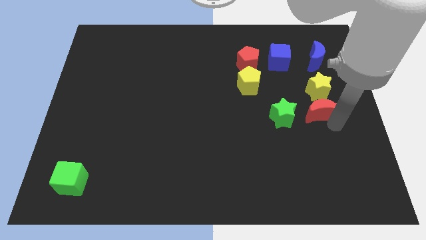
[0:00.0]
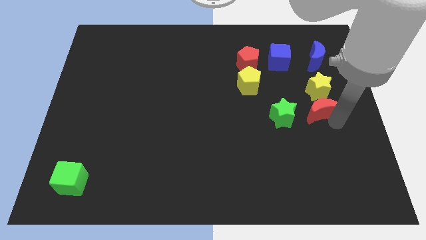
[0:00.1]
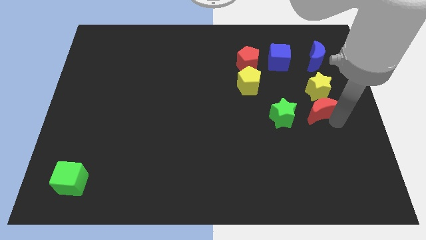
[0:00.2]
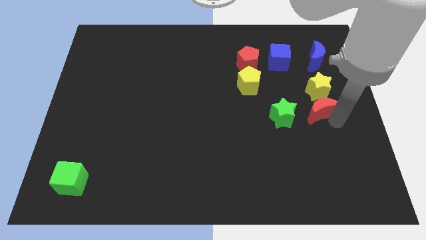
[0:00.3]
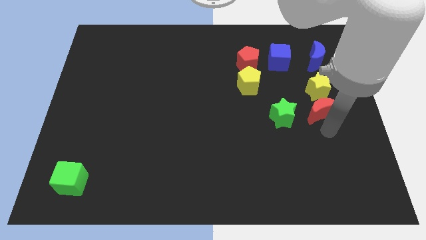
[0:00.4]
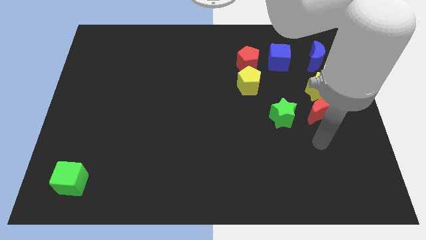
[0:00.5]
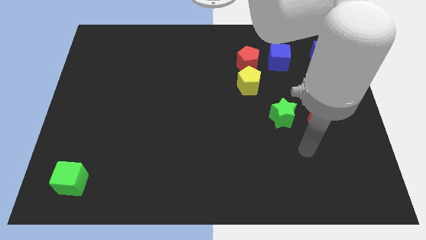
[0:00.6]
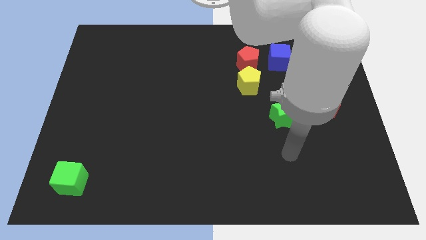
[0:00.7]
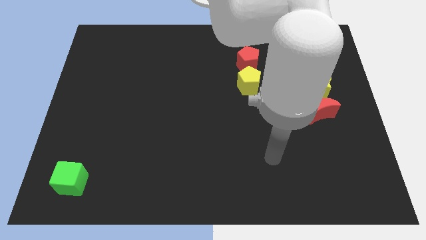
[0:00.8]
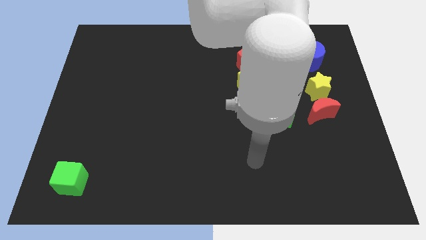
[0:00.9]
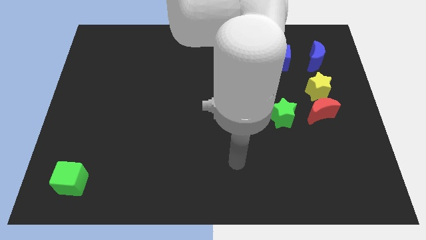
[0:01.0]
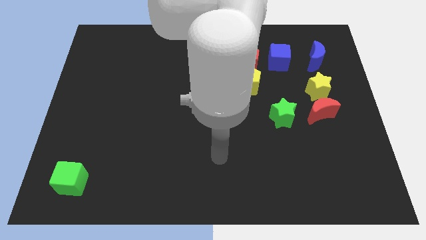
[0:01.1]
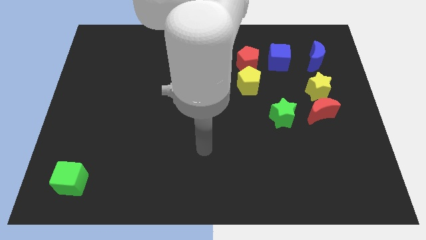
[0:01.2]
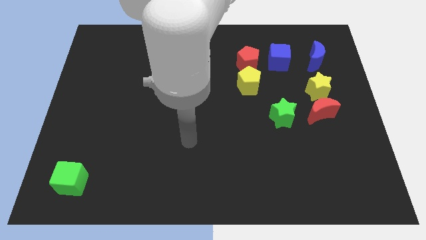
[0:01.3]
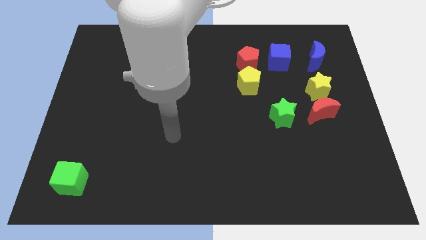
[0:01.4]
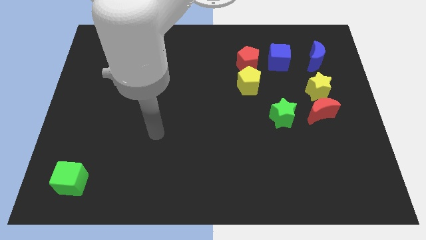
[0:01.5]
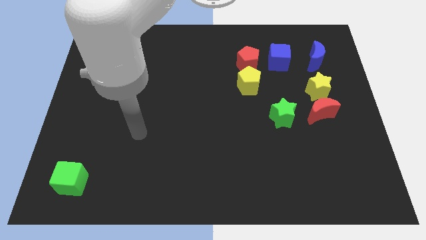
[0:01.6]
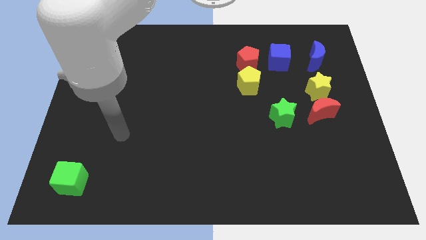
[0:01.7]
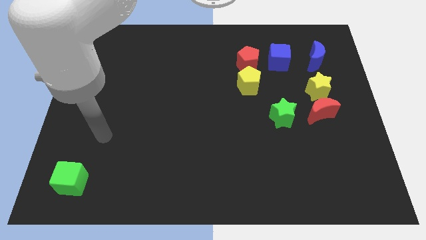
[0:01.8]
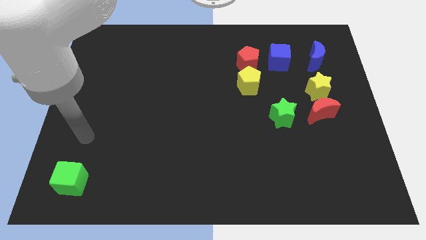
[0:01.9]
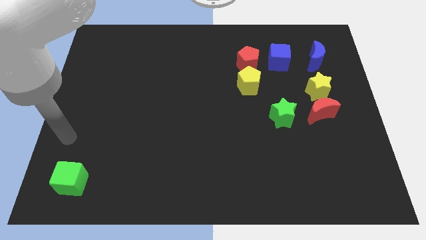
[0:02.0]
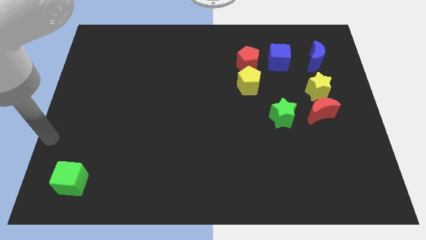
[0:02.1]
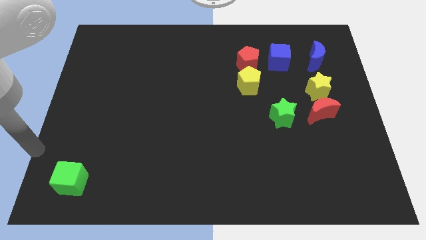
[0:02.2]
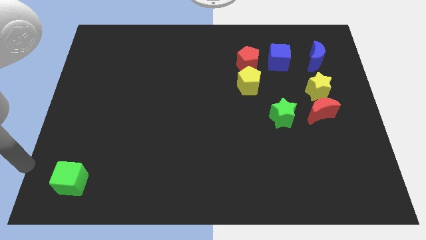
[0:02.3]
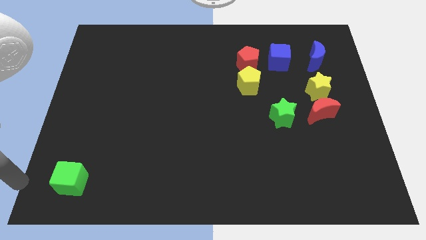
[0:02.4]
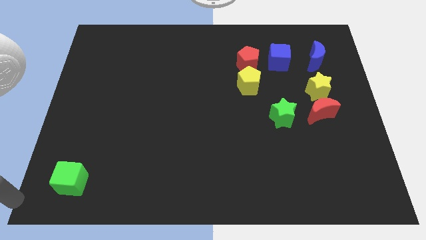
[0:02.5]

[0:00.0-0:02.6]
move the arm to the left bottom of the board

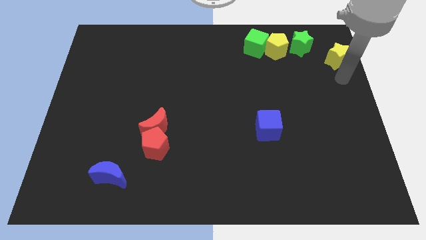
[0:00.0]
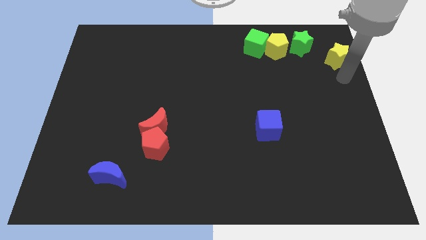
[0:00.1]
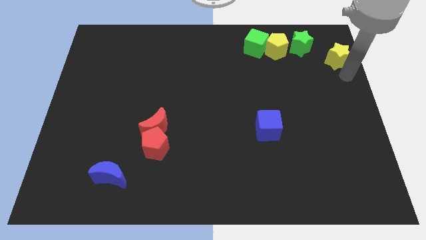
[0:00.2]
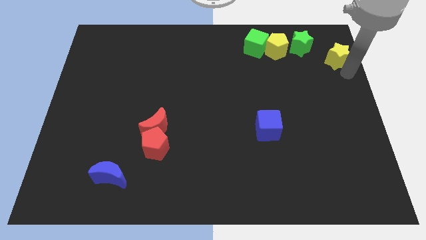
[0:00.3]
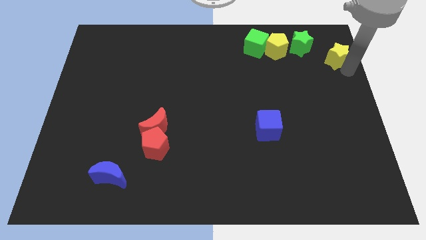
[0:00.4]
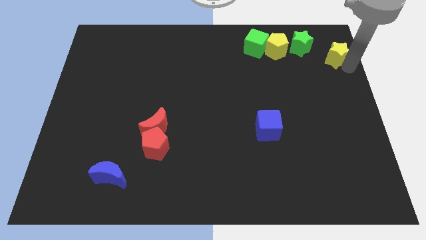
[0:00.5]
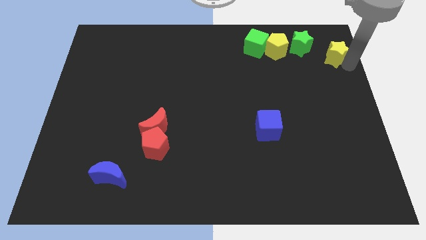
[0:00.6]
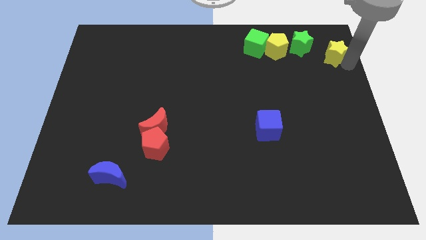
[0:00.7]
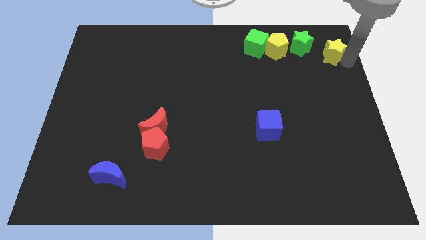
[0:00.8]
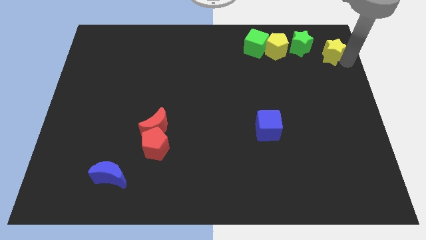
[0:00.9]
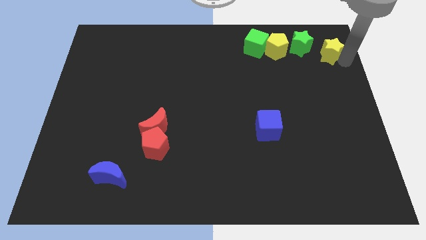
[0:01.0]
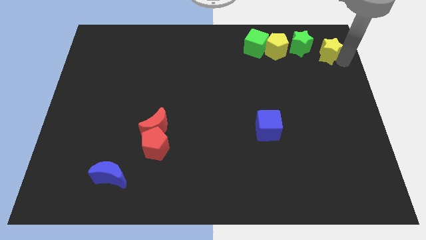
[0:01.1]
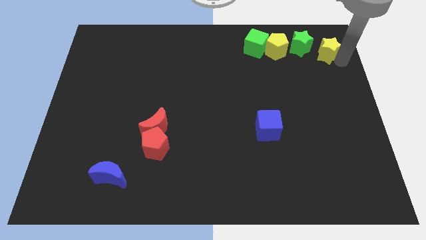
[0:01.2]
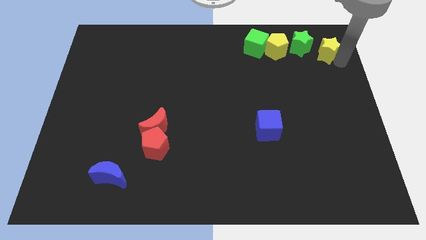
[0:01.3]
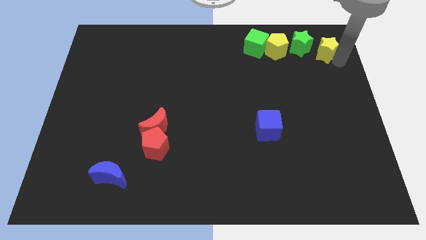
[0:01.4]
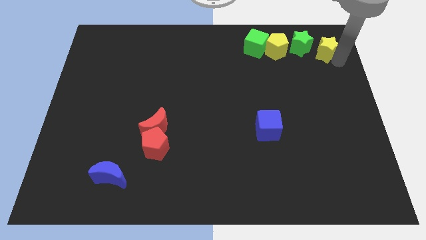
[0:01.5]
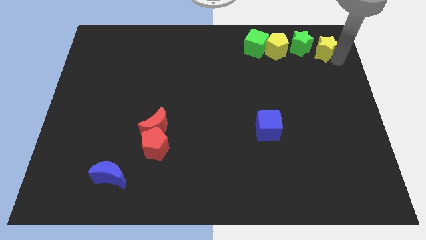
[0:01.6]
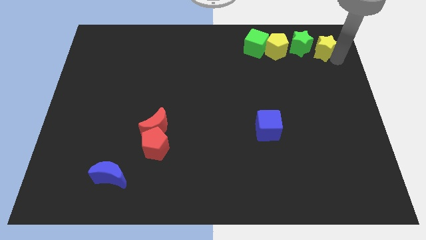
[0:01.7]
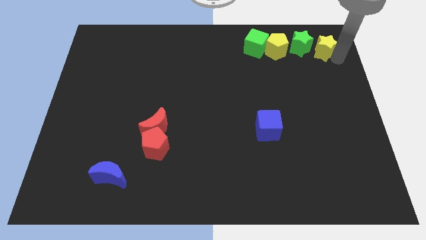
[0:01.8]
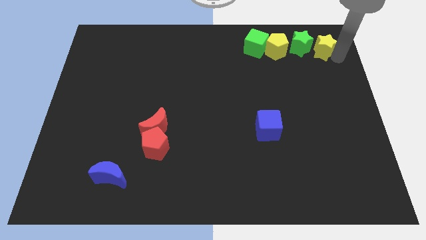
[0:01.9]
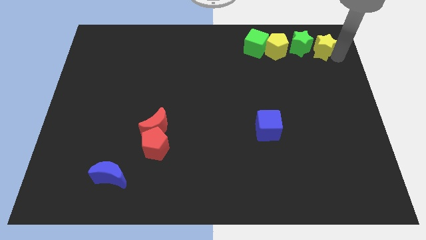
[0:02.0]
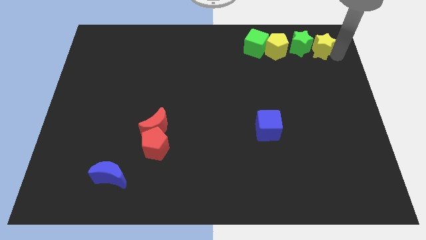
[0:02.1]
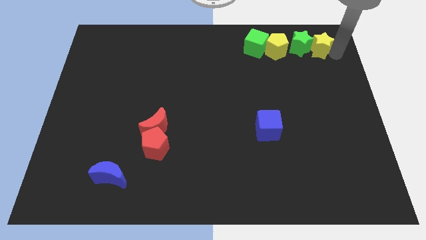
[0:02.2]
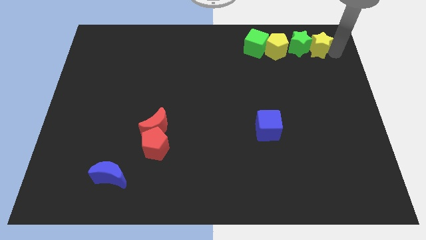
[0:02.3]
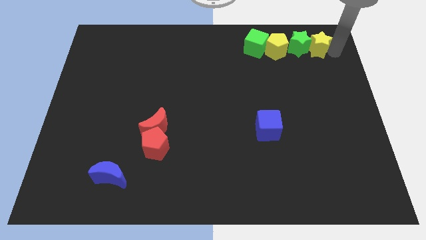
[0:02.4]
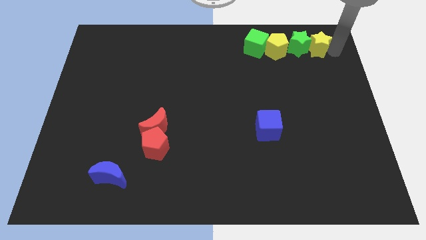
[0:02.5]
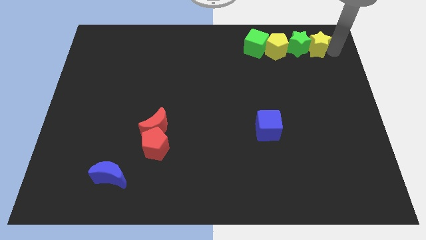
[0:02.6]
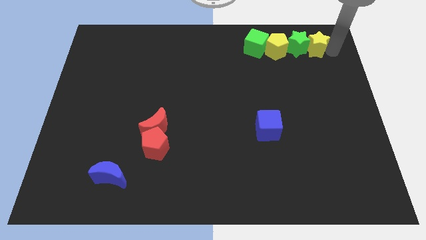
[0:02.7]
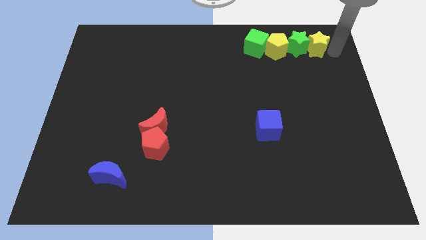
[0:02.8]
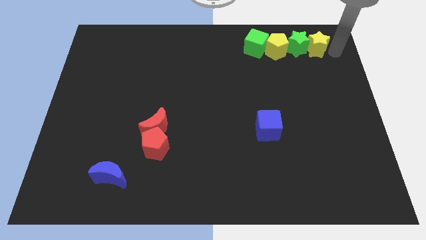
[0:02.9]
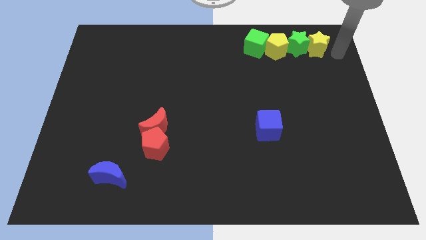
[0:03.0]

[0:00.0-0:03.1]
push the yellow star on the right side of the green star

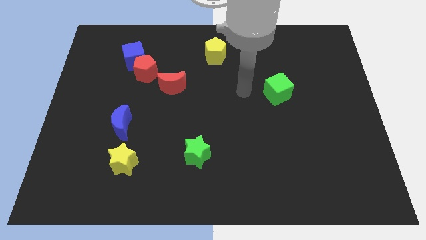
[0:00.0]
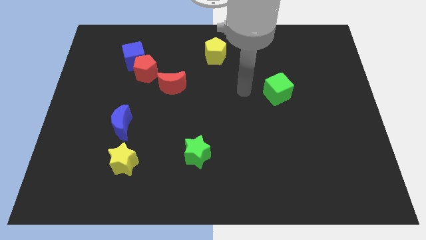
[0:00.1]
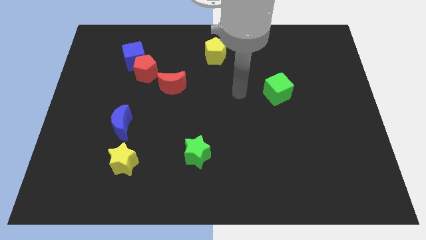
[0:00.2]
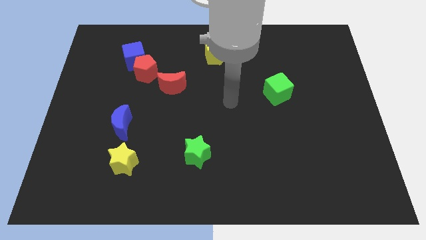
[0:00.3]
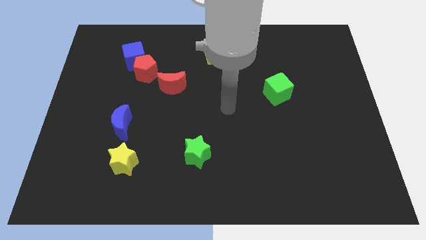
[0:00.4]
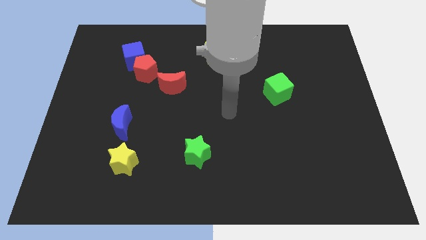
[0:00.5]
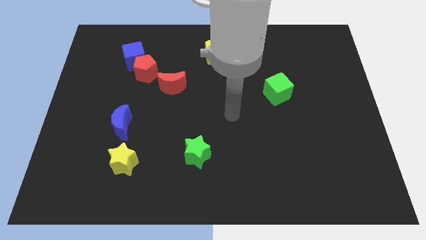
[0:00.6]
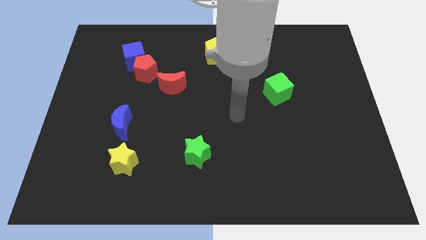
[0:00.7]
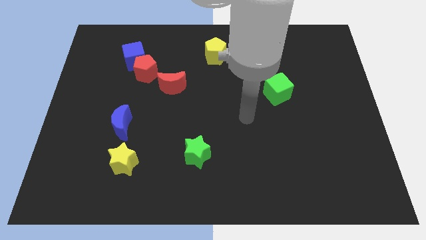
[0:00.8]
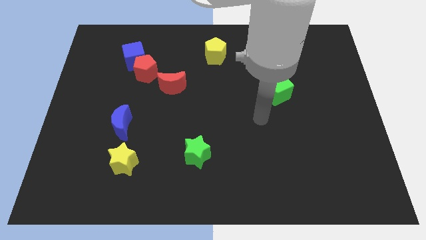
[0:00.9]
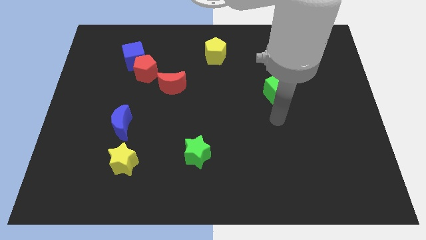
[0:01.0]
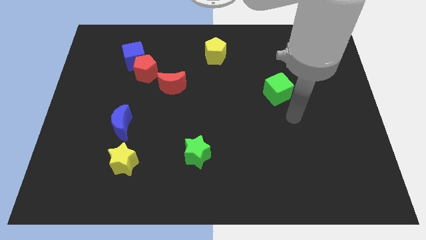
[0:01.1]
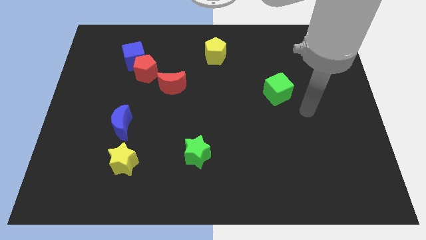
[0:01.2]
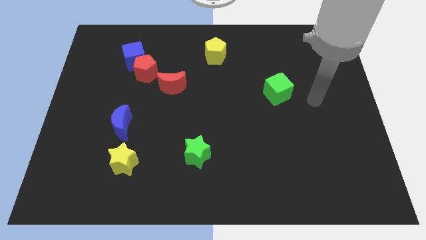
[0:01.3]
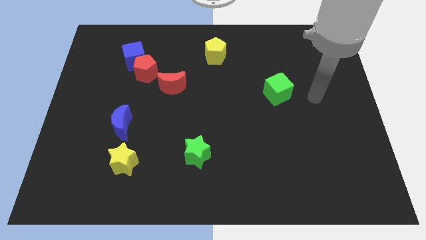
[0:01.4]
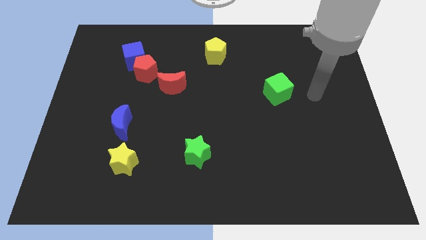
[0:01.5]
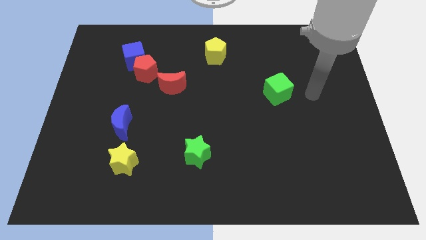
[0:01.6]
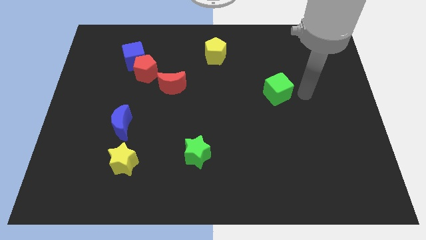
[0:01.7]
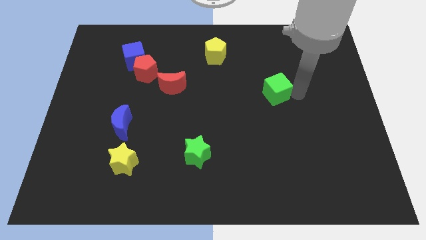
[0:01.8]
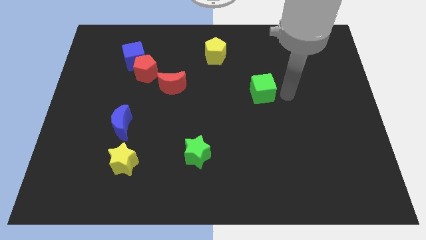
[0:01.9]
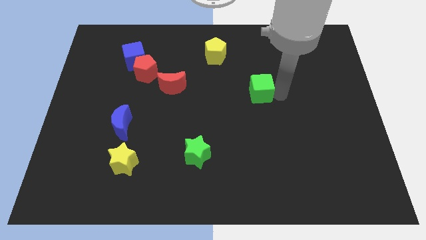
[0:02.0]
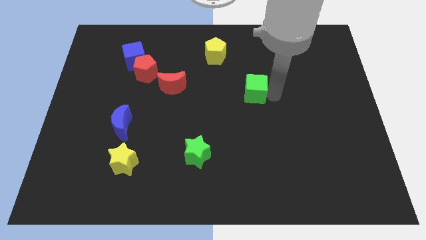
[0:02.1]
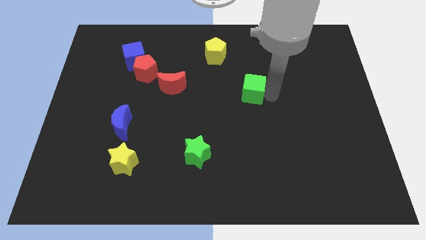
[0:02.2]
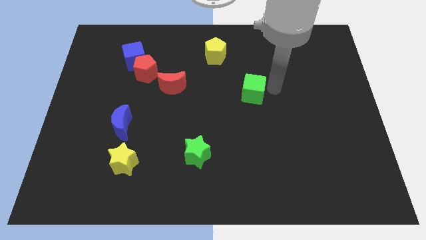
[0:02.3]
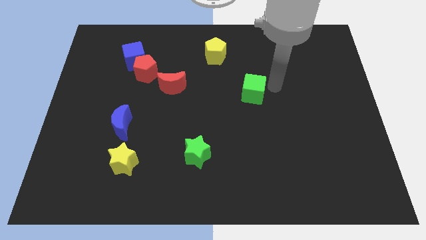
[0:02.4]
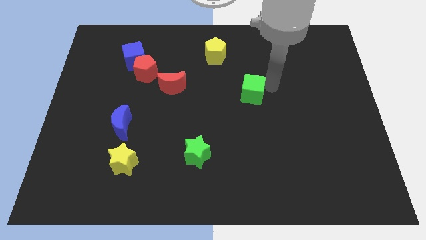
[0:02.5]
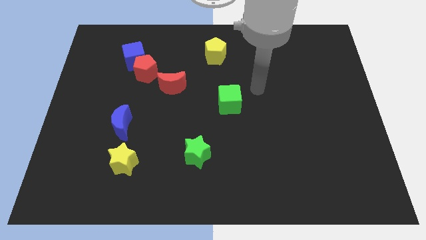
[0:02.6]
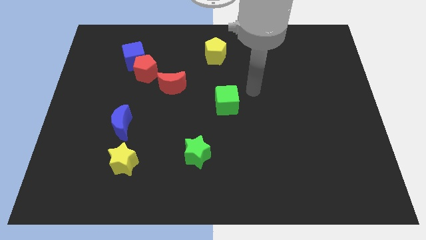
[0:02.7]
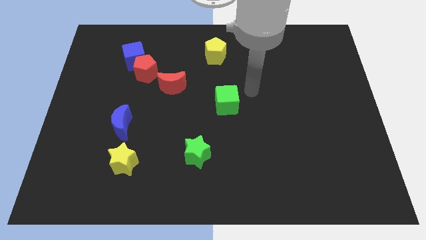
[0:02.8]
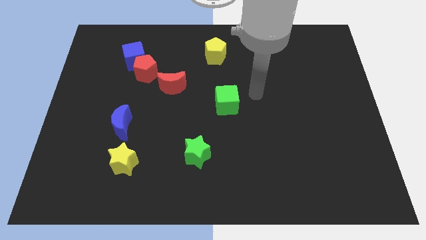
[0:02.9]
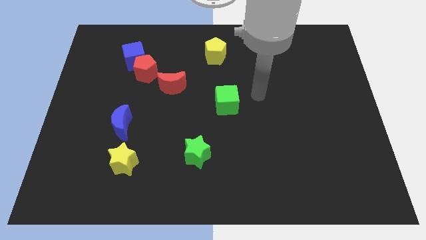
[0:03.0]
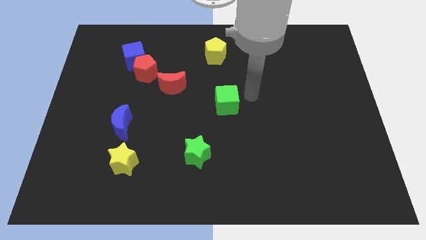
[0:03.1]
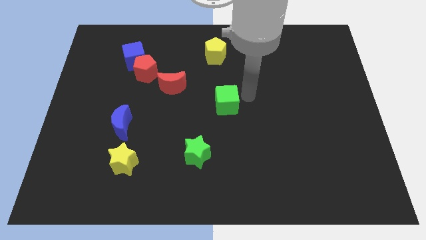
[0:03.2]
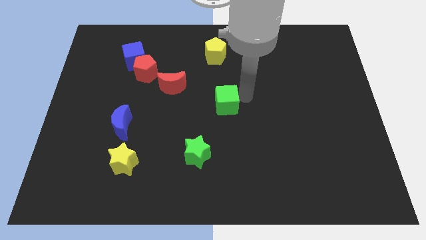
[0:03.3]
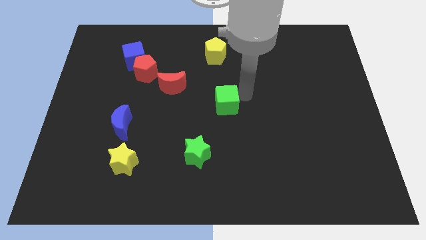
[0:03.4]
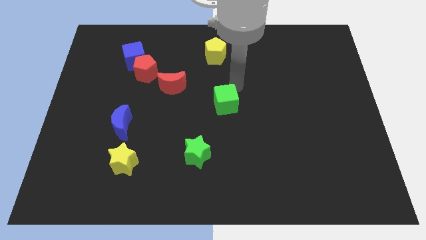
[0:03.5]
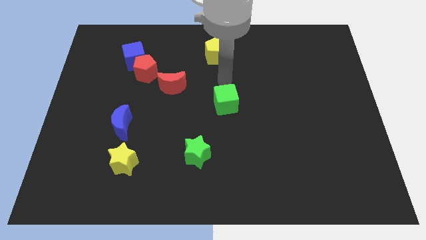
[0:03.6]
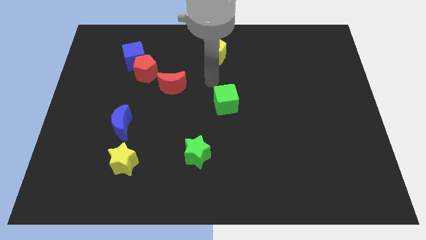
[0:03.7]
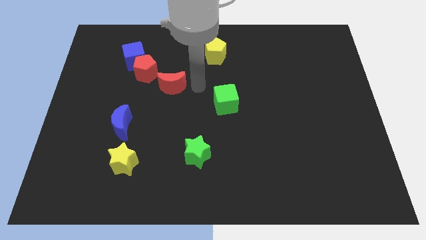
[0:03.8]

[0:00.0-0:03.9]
push the green cube slightly to the left
